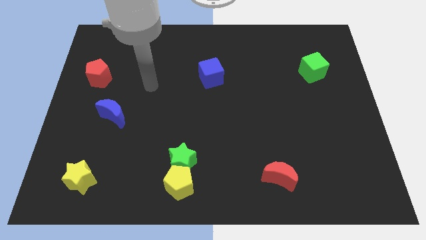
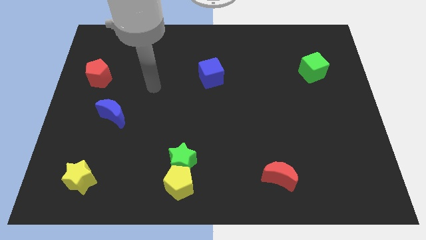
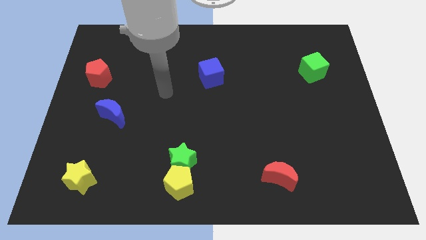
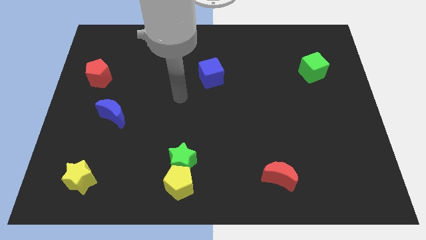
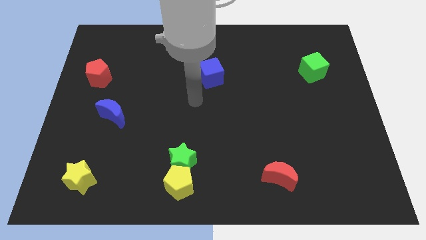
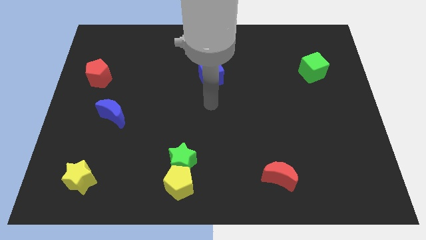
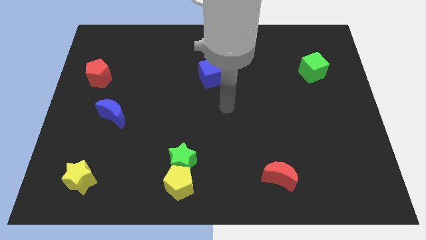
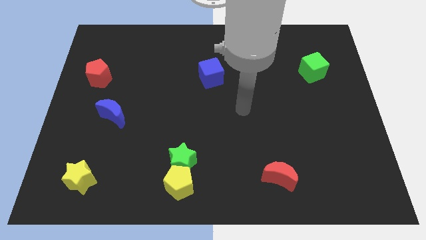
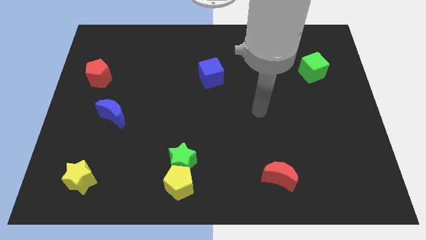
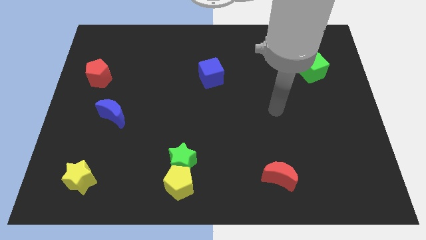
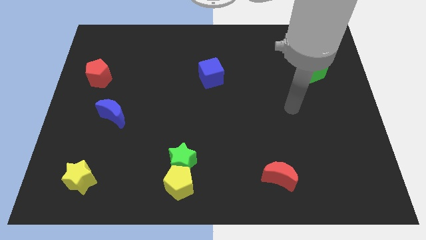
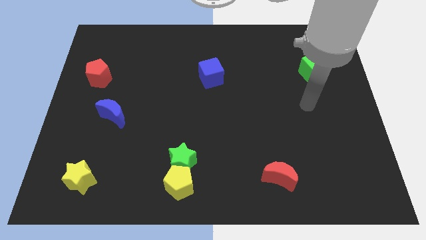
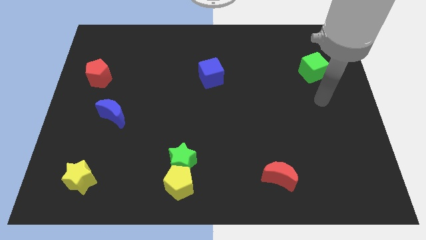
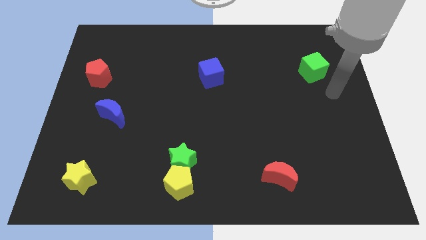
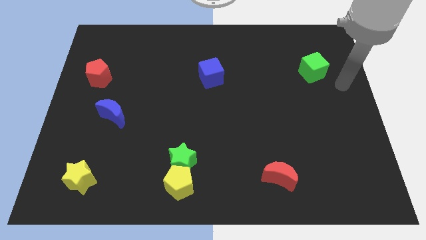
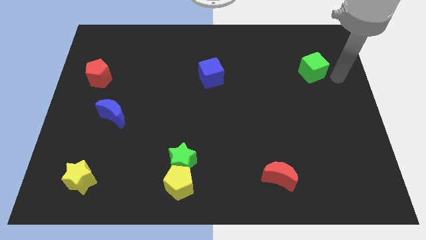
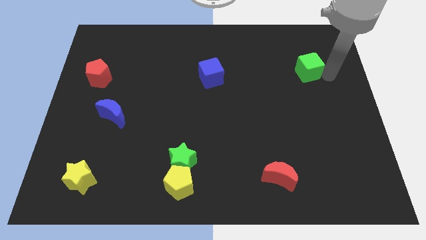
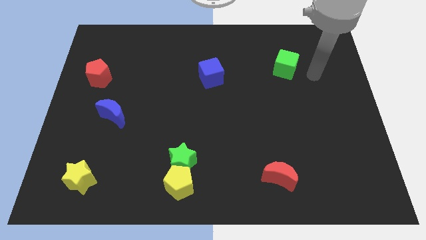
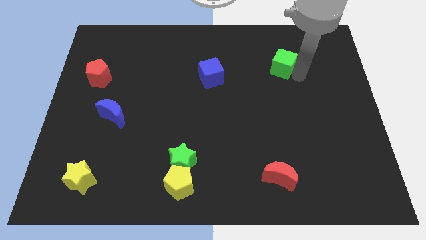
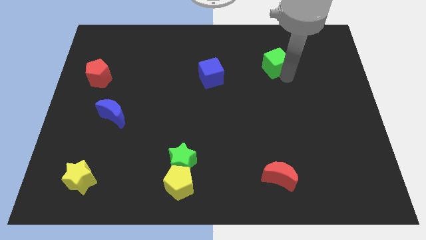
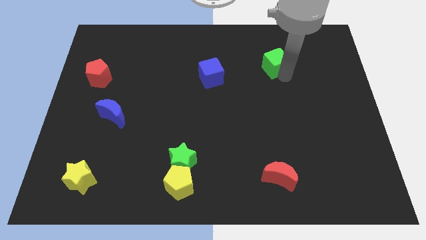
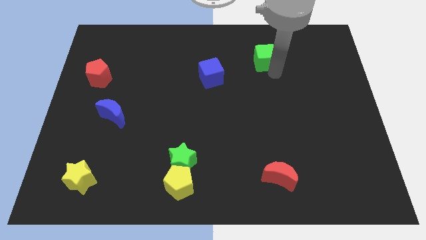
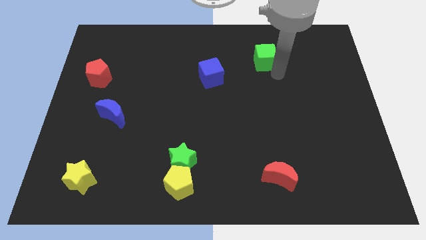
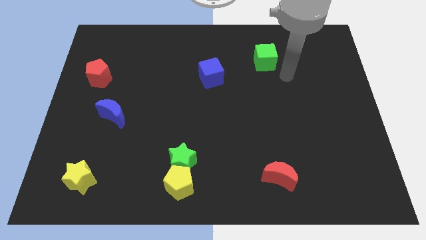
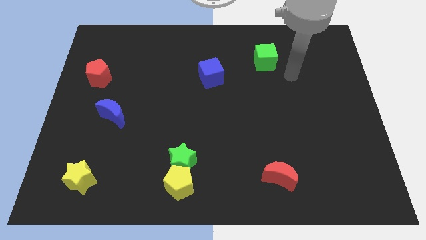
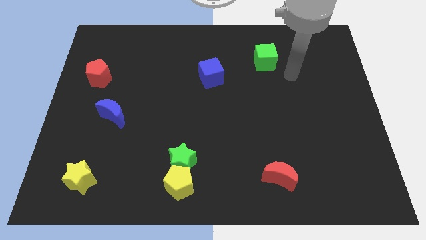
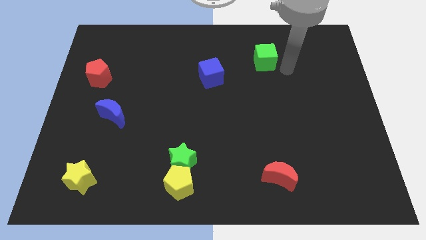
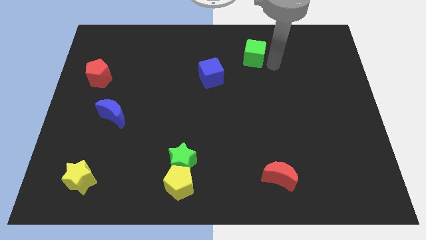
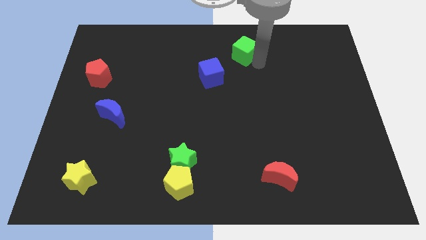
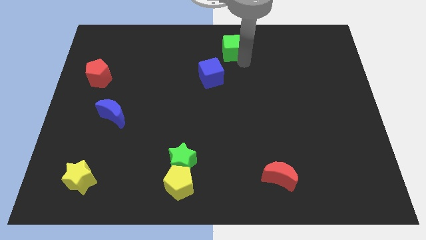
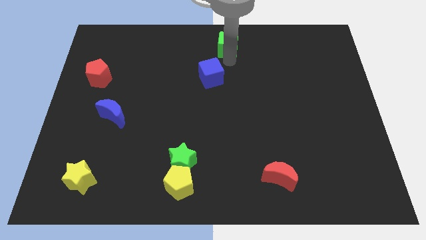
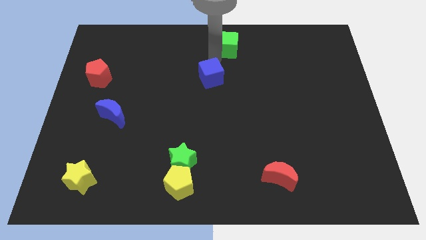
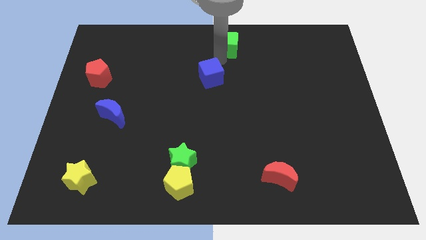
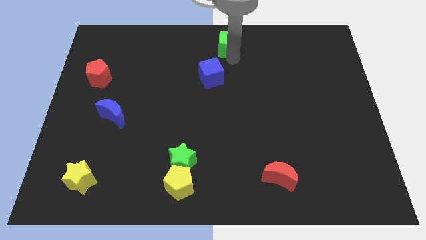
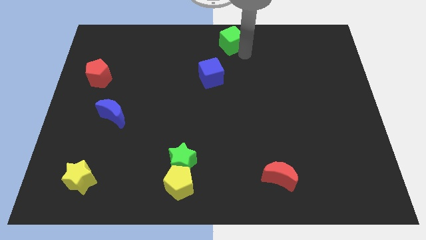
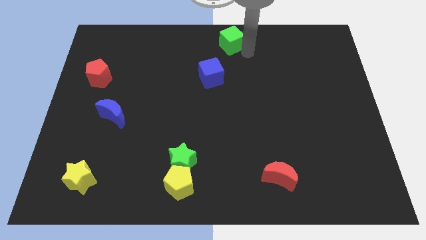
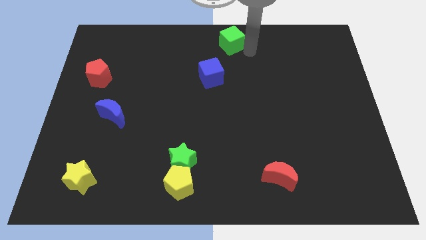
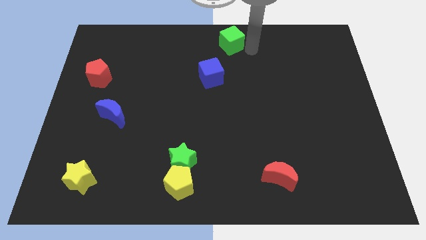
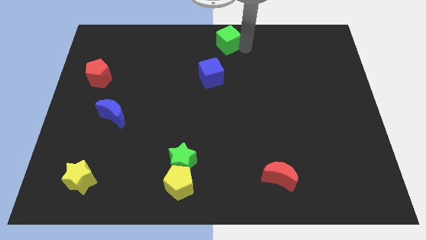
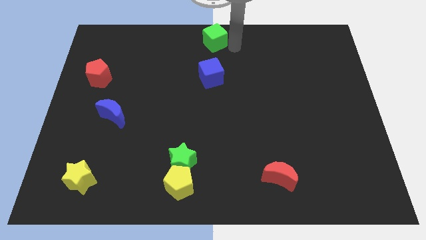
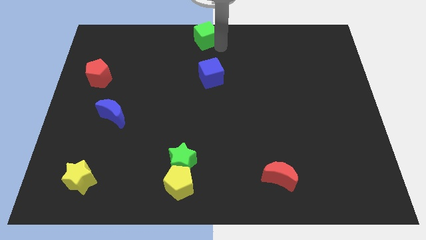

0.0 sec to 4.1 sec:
push the green cube to the top center of the board

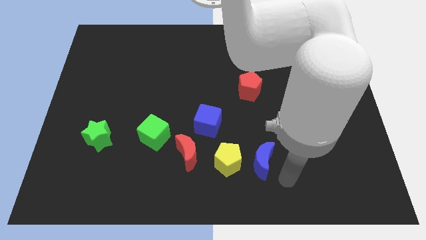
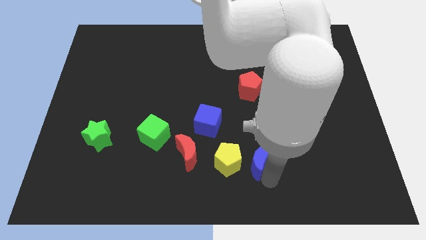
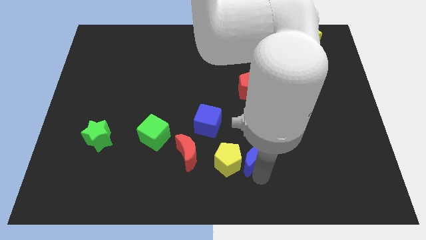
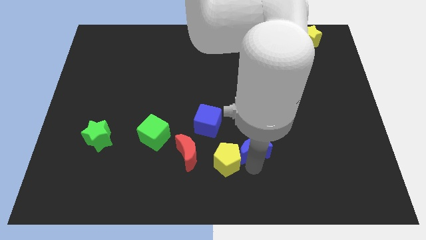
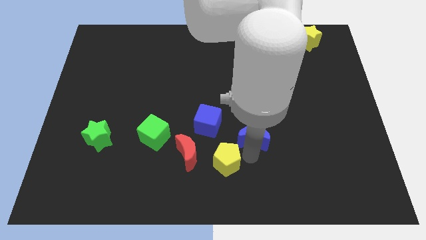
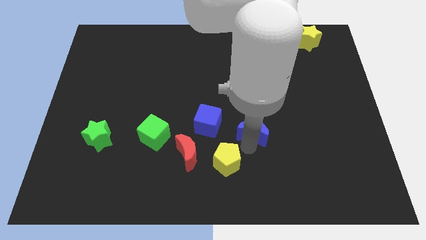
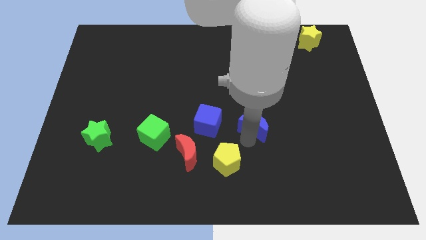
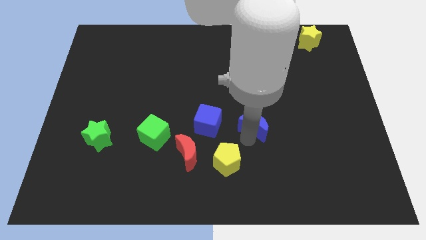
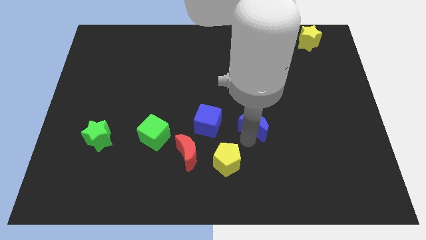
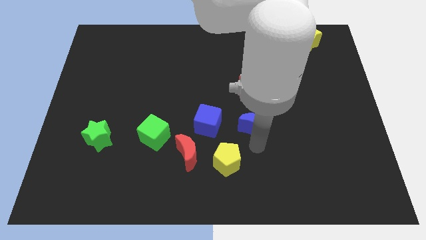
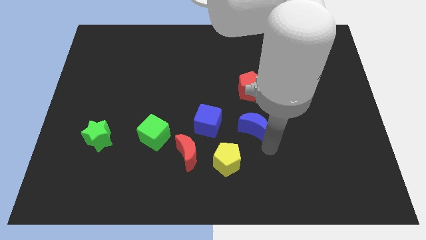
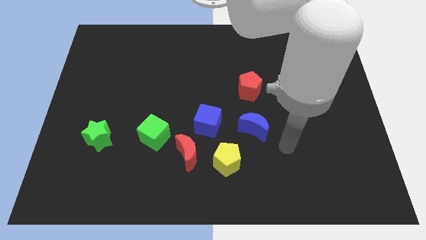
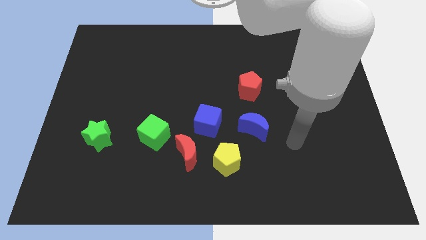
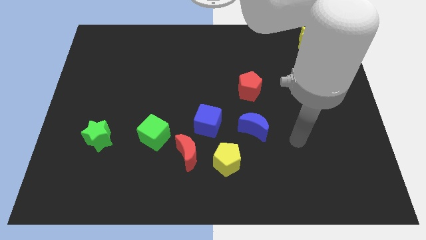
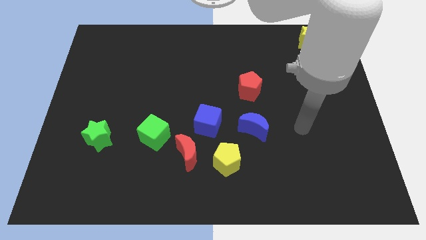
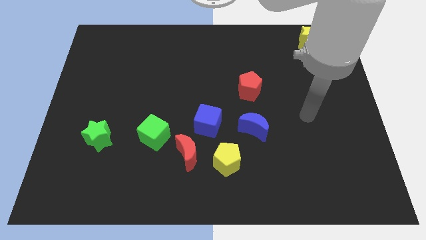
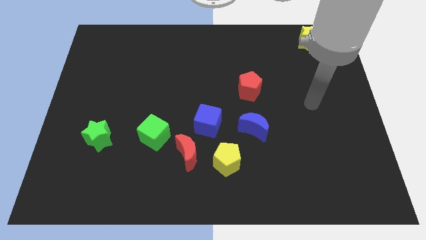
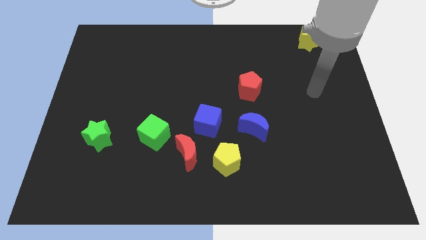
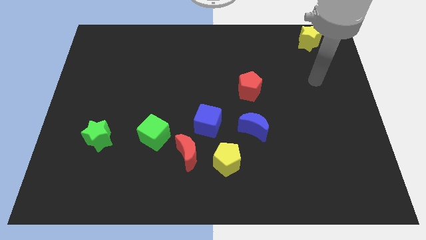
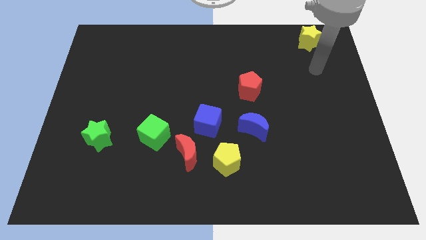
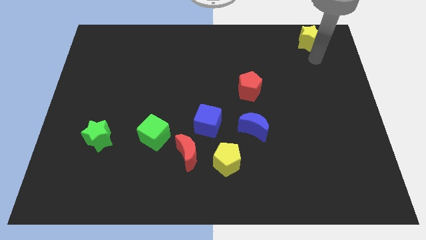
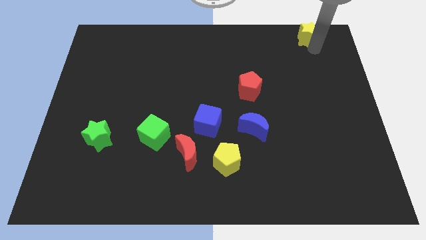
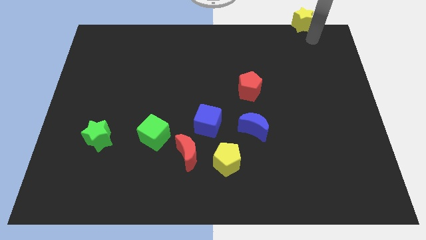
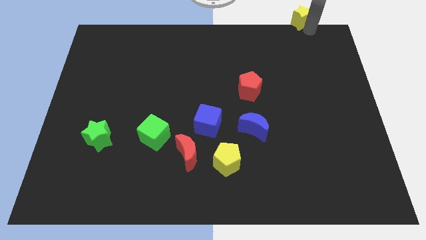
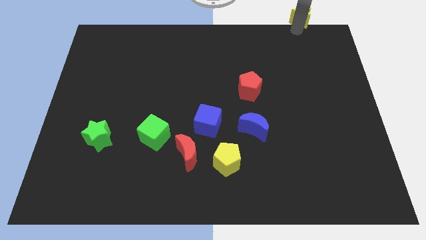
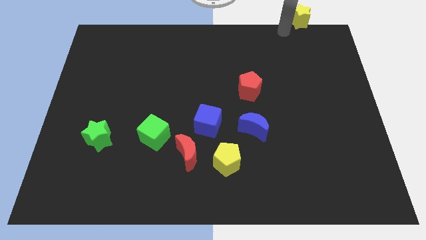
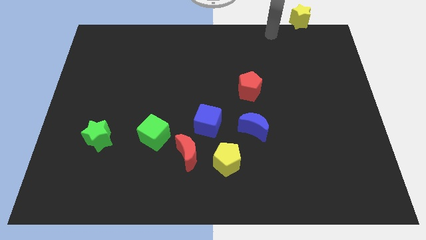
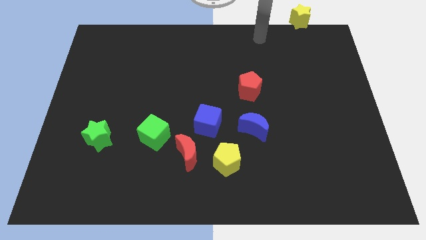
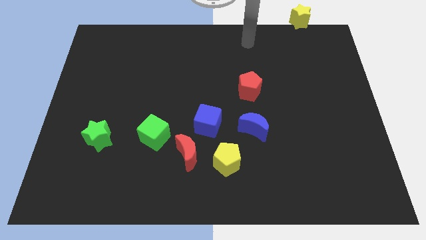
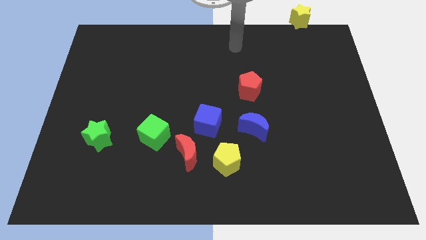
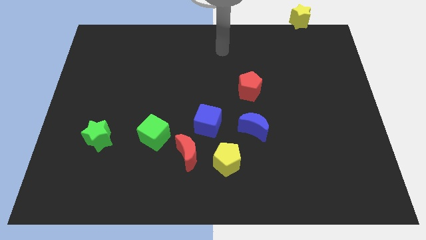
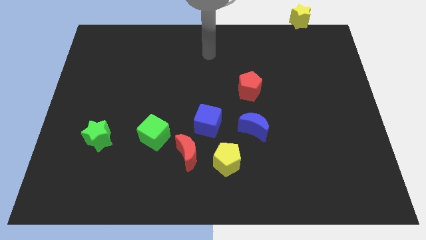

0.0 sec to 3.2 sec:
move the blue crescent and yellow star diagonally to each other

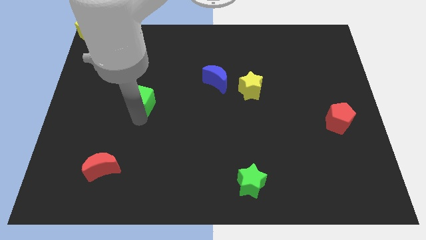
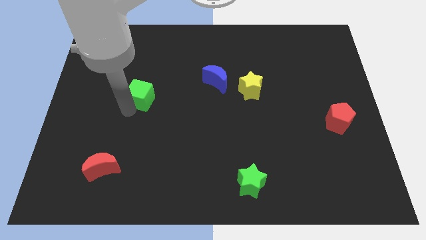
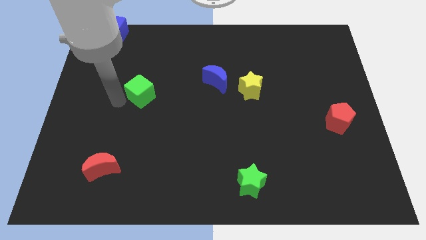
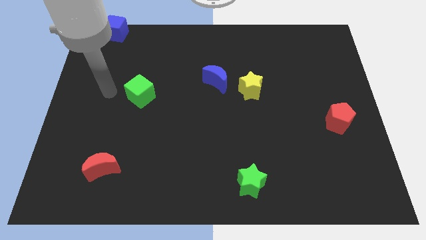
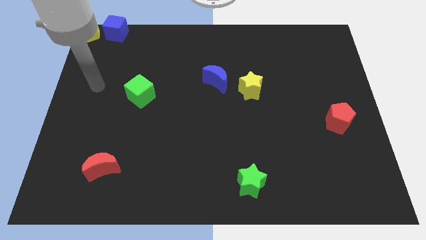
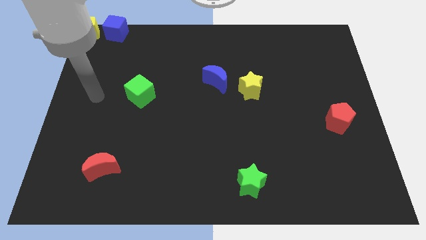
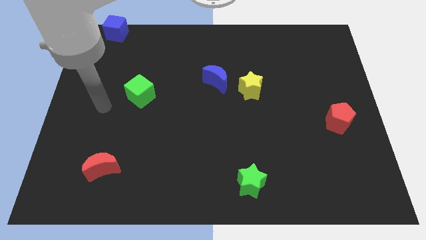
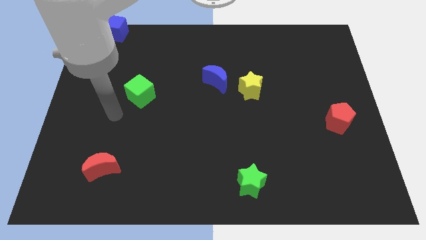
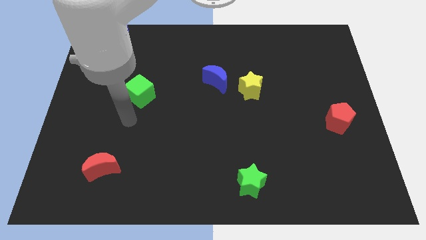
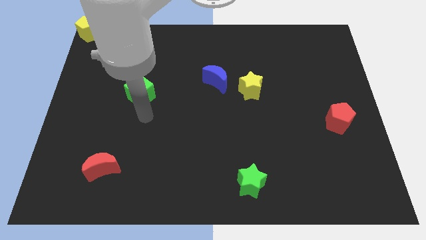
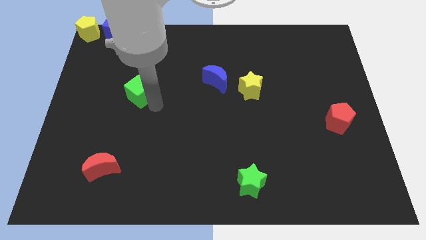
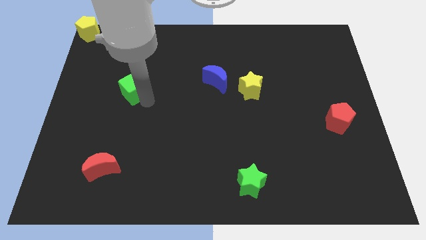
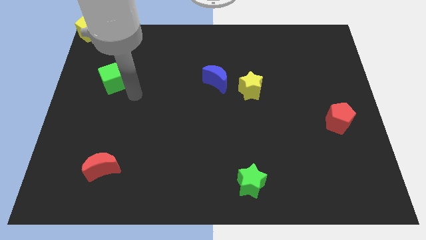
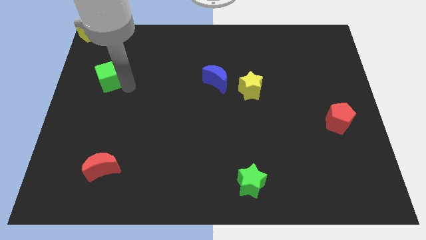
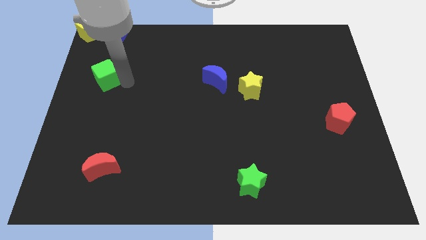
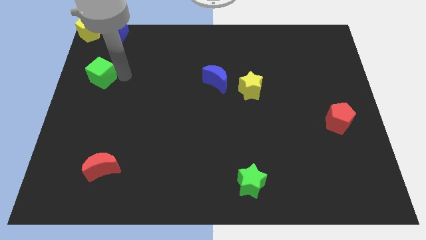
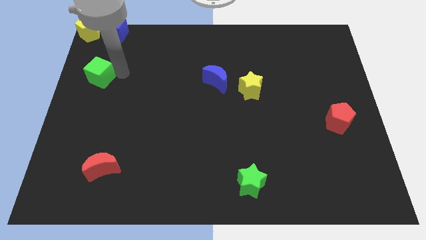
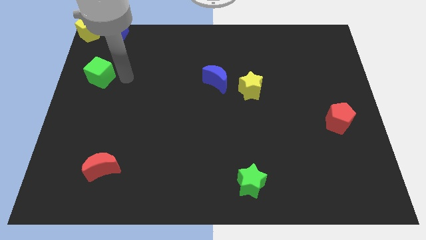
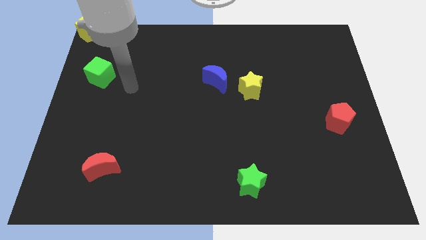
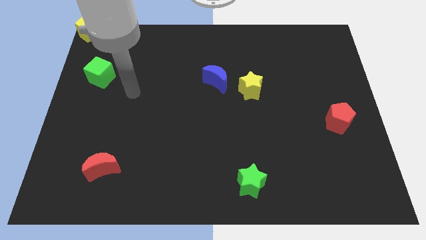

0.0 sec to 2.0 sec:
place the green cube vertically below the yellow pentagon
